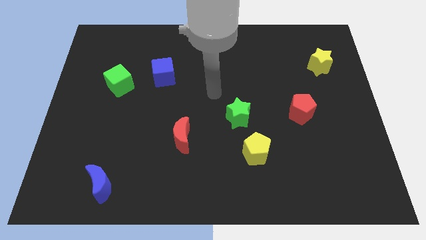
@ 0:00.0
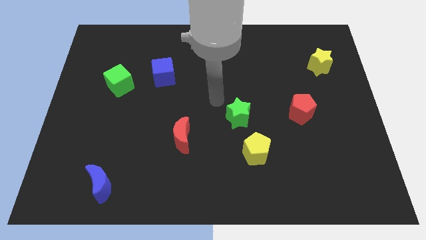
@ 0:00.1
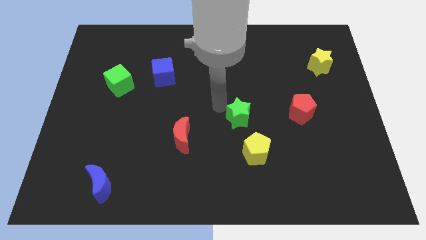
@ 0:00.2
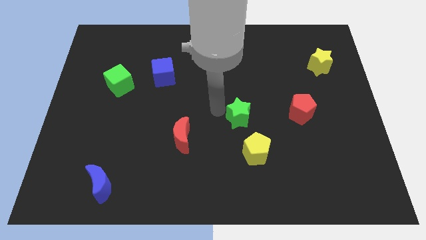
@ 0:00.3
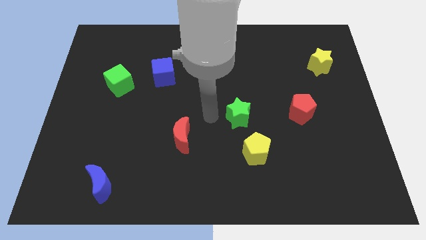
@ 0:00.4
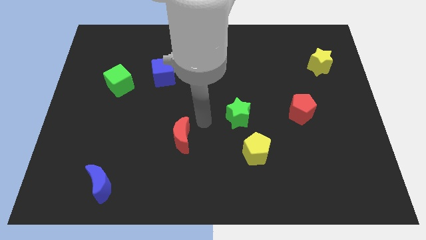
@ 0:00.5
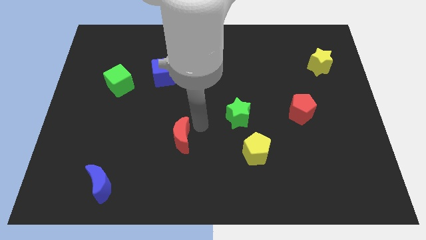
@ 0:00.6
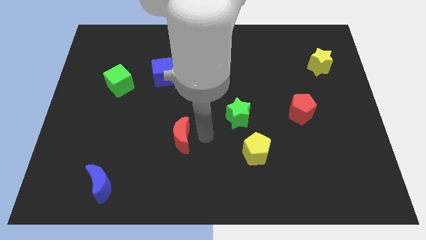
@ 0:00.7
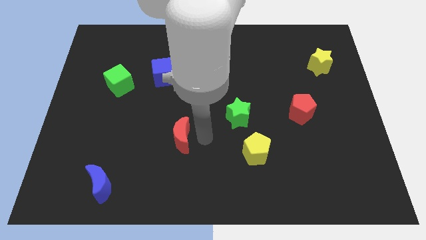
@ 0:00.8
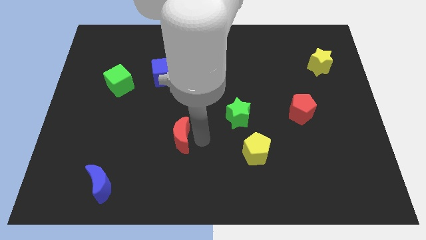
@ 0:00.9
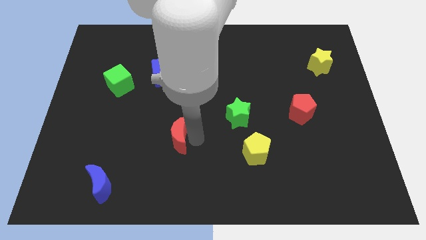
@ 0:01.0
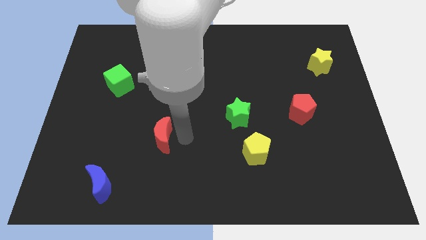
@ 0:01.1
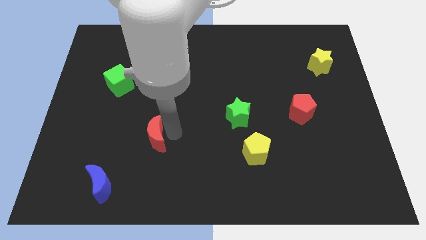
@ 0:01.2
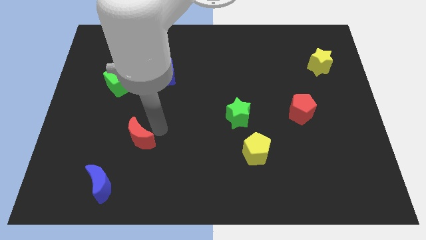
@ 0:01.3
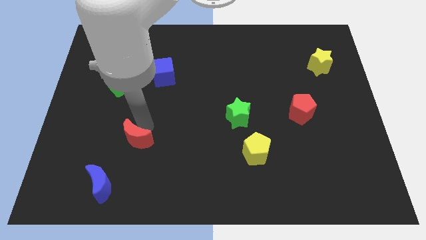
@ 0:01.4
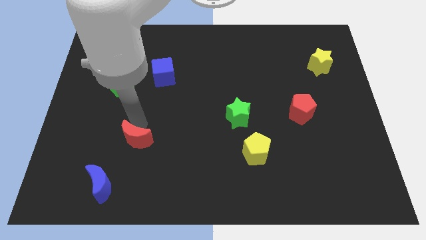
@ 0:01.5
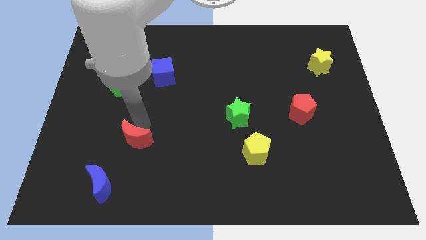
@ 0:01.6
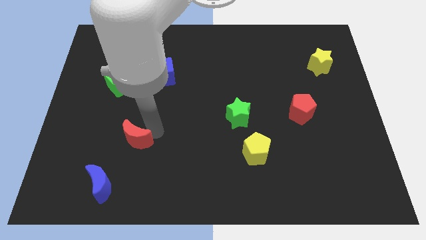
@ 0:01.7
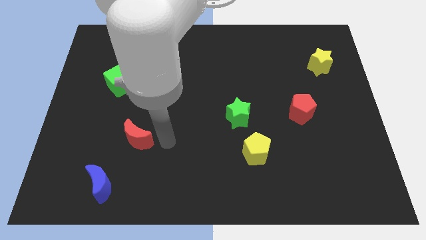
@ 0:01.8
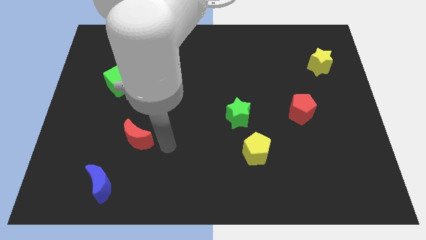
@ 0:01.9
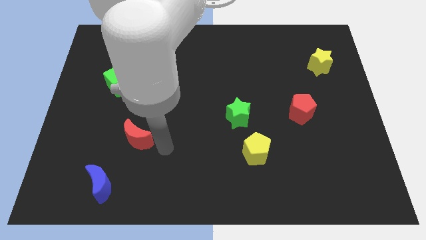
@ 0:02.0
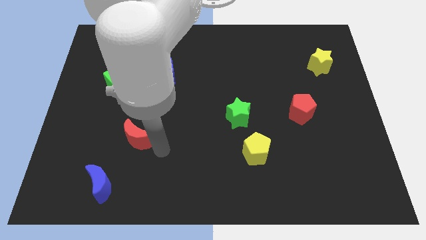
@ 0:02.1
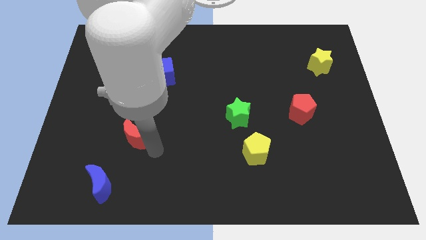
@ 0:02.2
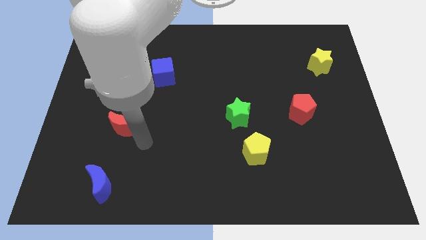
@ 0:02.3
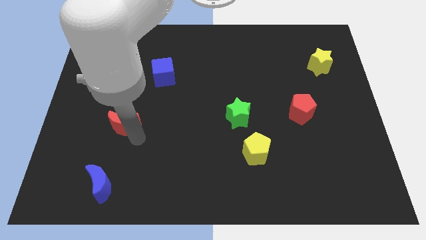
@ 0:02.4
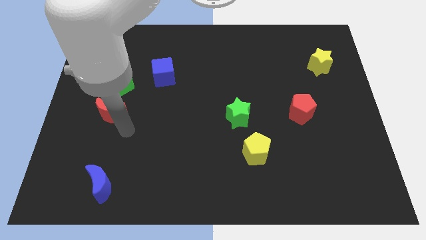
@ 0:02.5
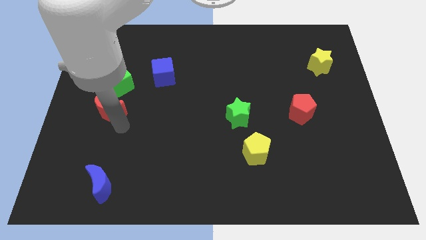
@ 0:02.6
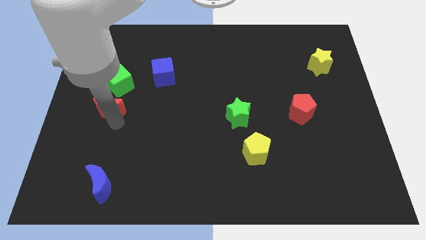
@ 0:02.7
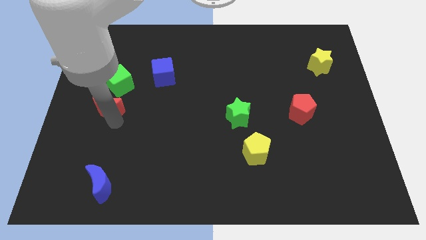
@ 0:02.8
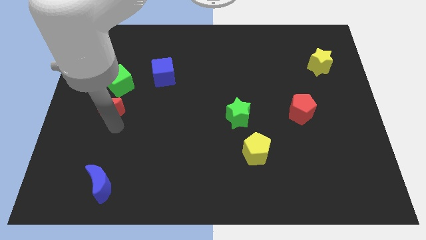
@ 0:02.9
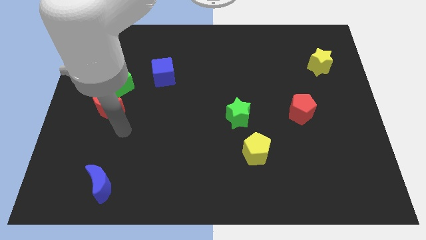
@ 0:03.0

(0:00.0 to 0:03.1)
move the red crescent towards the center left

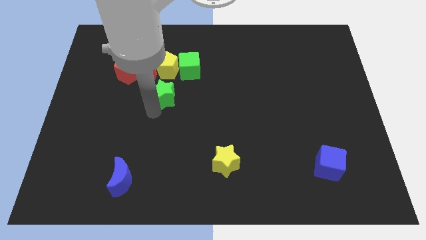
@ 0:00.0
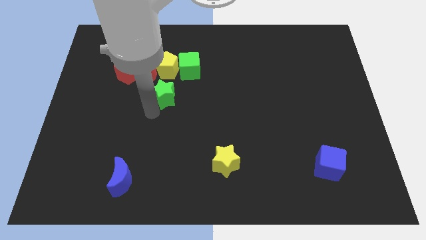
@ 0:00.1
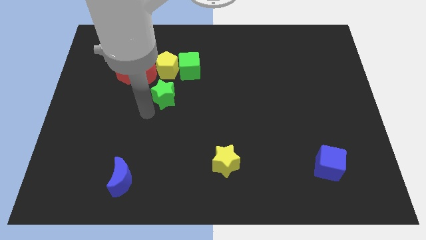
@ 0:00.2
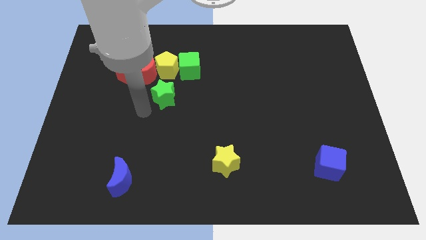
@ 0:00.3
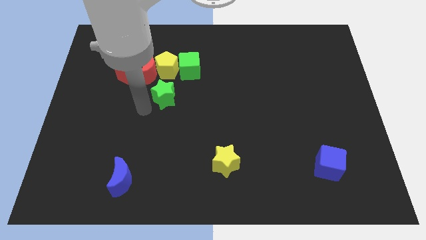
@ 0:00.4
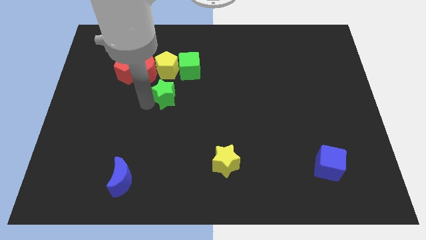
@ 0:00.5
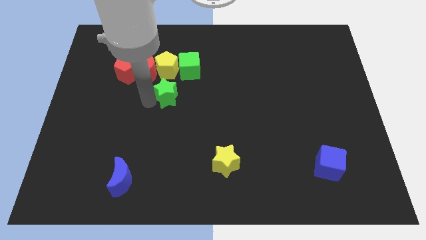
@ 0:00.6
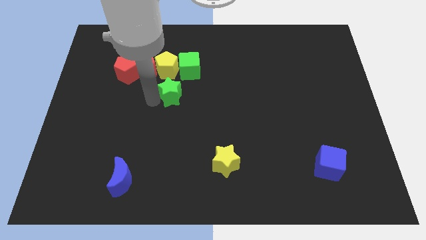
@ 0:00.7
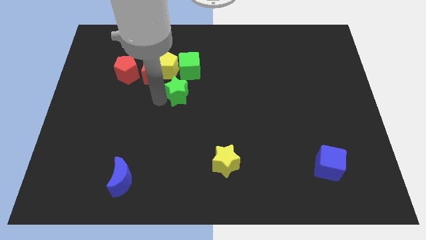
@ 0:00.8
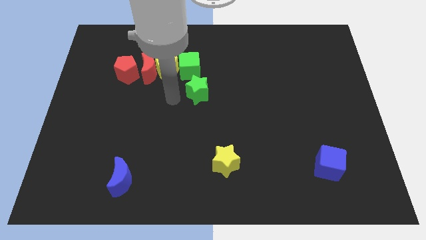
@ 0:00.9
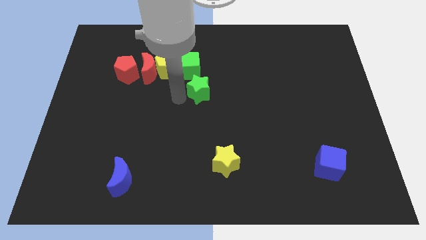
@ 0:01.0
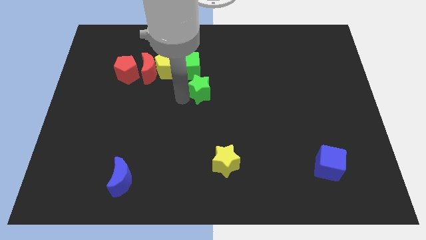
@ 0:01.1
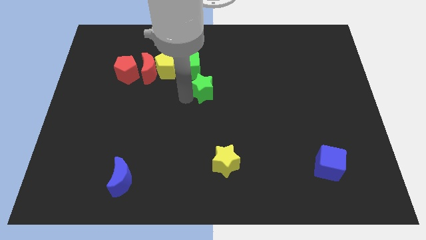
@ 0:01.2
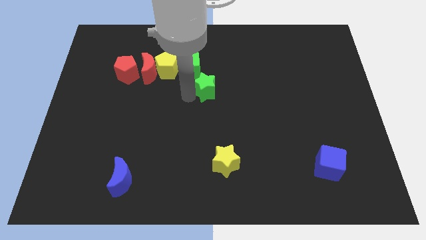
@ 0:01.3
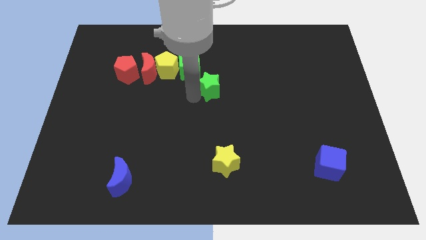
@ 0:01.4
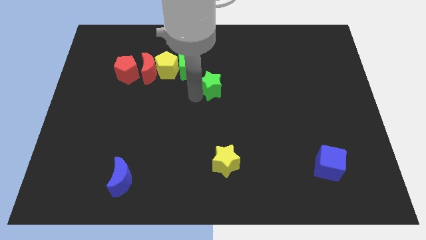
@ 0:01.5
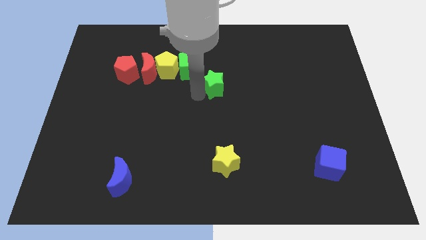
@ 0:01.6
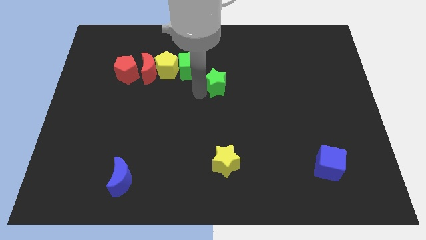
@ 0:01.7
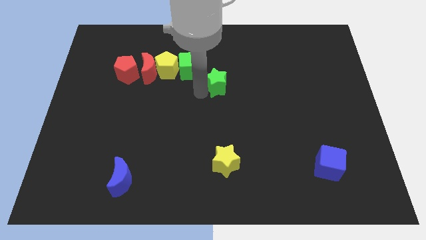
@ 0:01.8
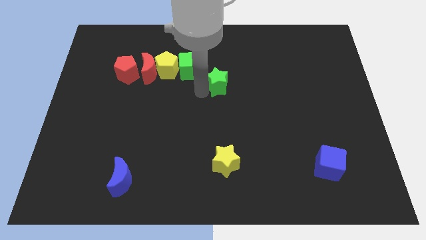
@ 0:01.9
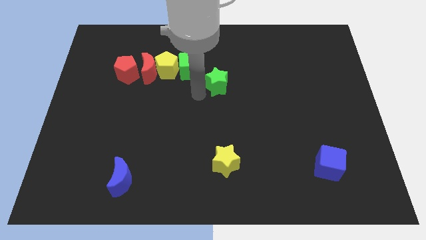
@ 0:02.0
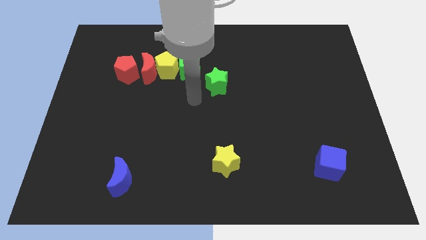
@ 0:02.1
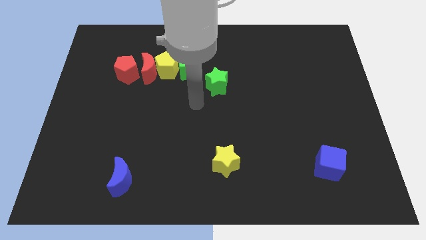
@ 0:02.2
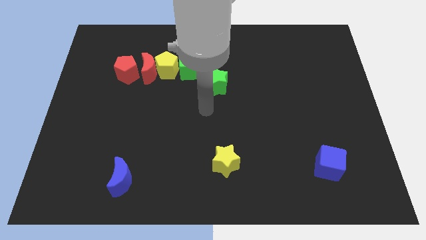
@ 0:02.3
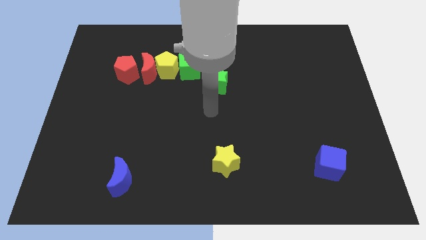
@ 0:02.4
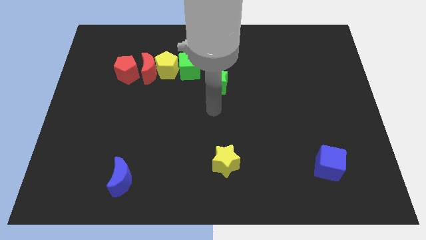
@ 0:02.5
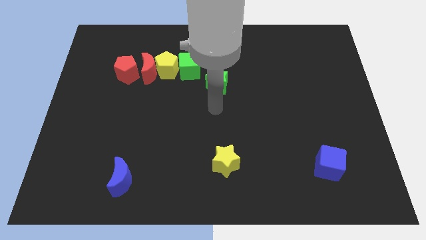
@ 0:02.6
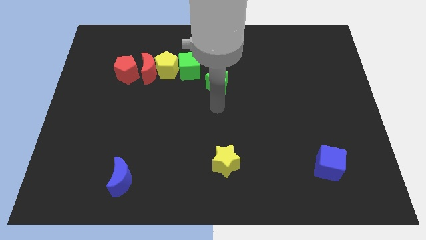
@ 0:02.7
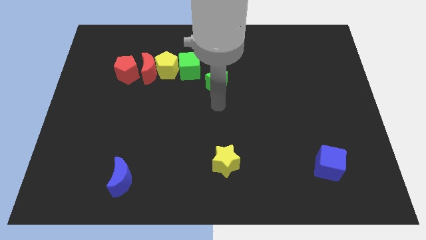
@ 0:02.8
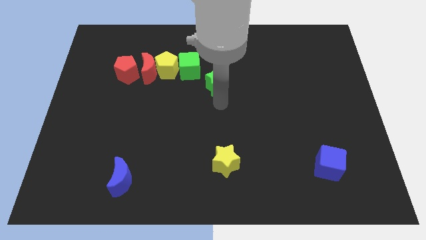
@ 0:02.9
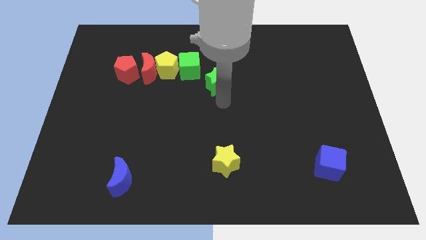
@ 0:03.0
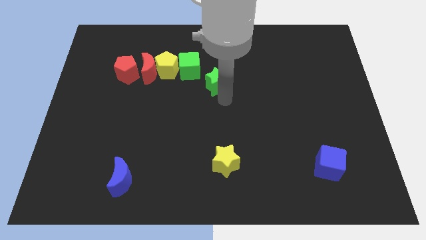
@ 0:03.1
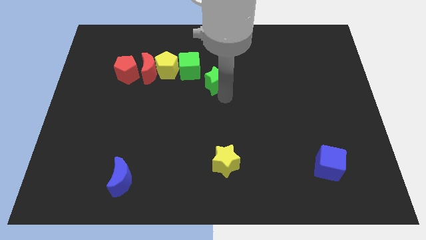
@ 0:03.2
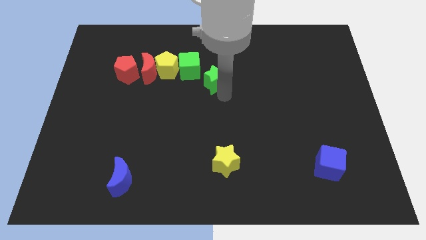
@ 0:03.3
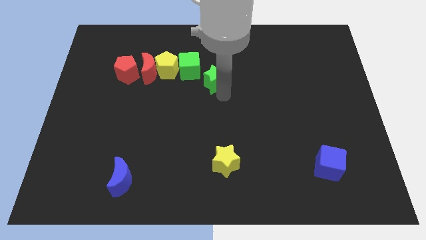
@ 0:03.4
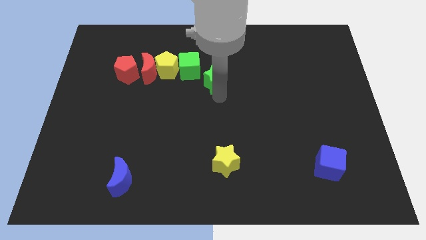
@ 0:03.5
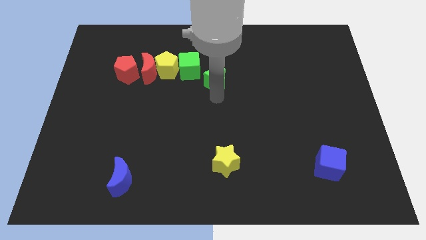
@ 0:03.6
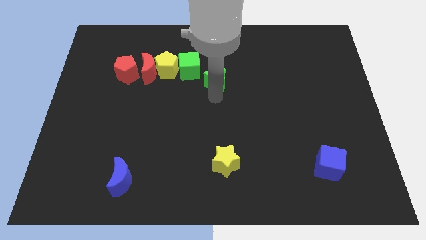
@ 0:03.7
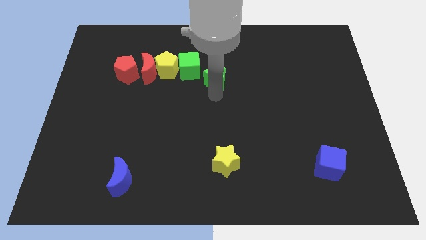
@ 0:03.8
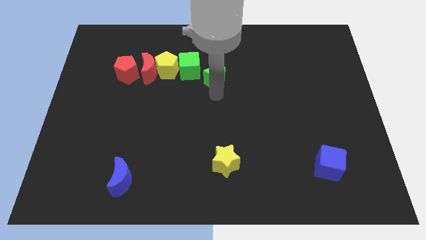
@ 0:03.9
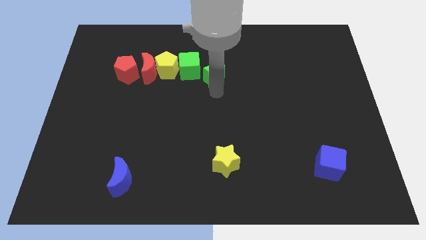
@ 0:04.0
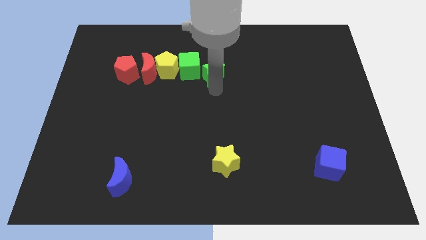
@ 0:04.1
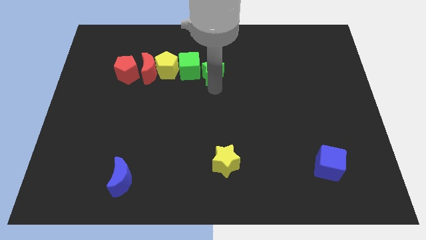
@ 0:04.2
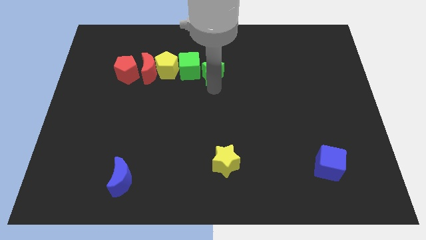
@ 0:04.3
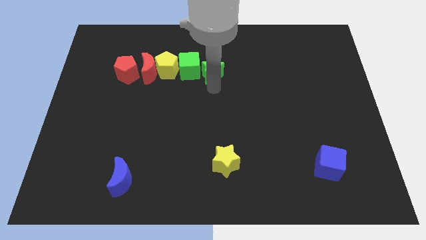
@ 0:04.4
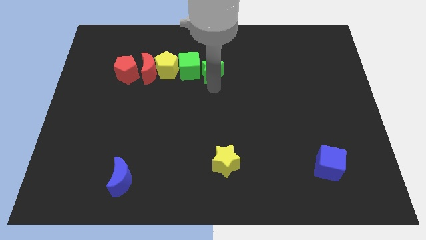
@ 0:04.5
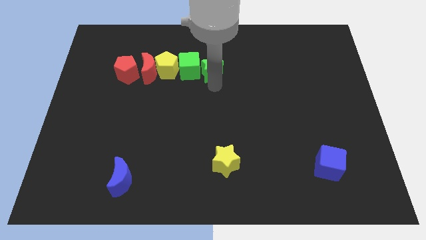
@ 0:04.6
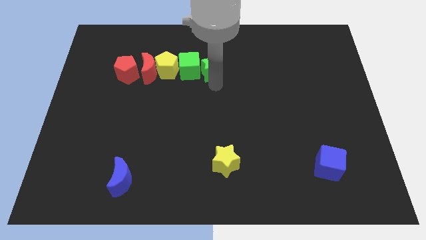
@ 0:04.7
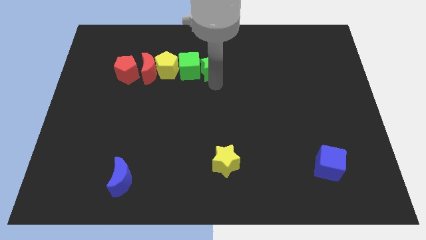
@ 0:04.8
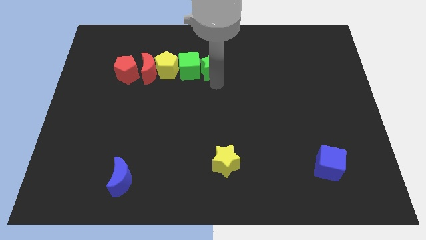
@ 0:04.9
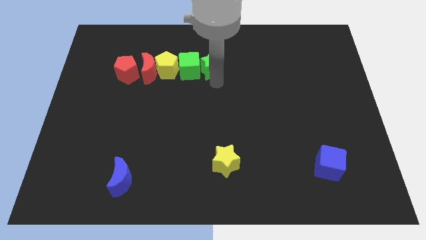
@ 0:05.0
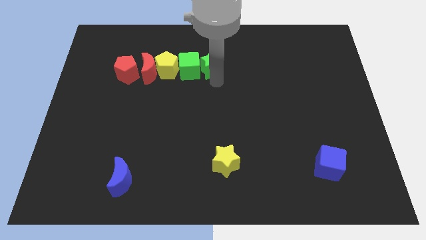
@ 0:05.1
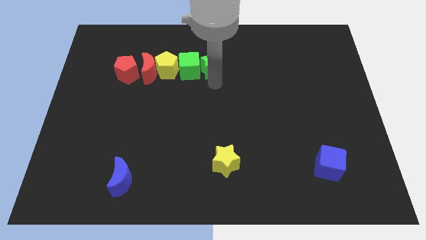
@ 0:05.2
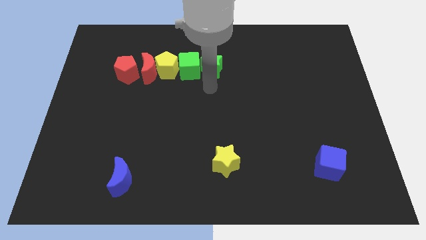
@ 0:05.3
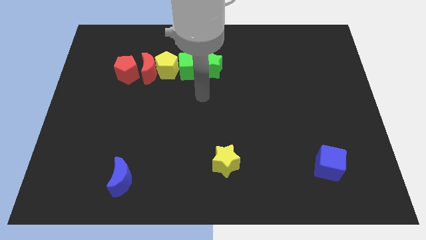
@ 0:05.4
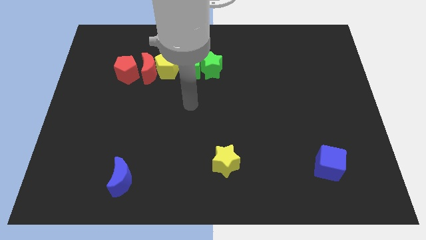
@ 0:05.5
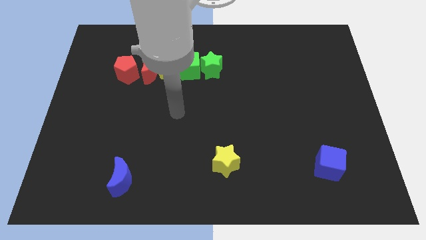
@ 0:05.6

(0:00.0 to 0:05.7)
move the green star towards the top center of the board
